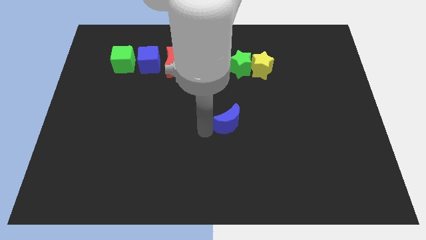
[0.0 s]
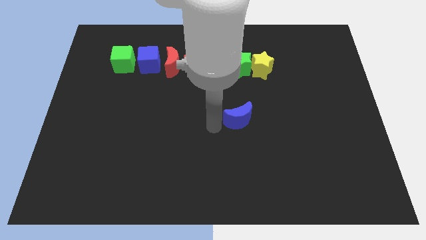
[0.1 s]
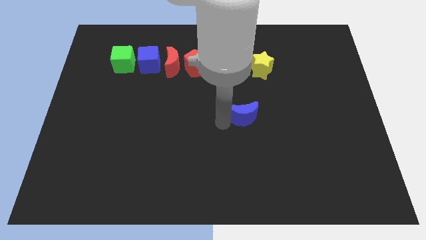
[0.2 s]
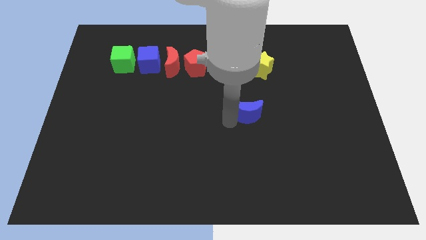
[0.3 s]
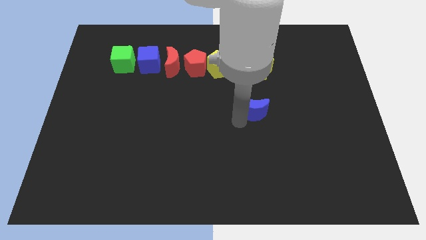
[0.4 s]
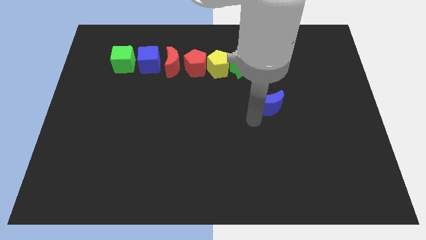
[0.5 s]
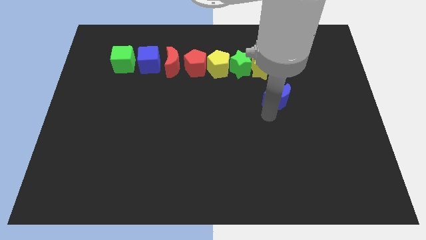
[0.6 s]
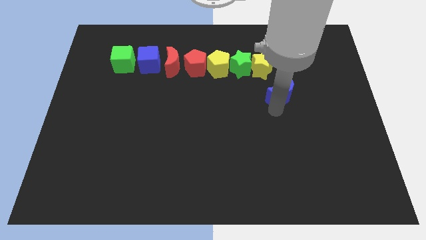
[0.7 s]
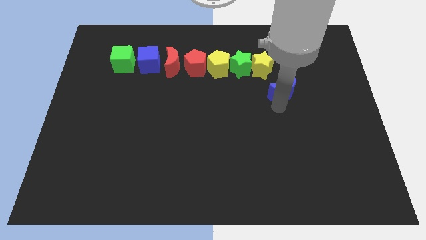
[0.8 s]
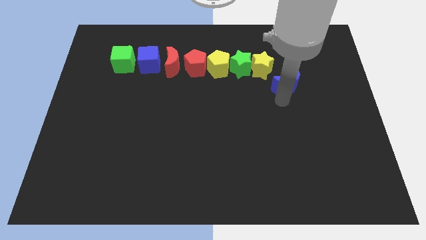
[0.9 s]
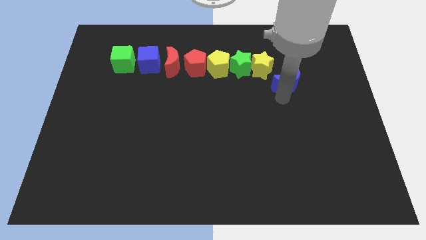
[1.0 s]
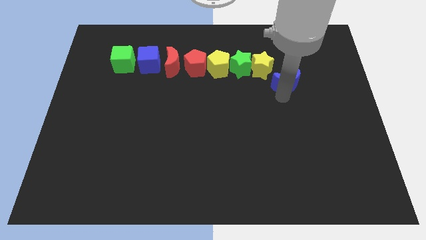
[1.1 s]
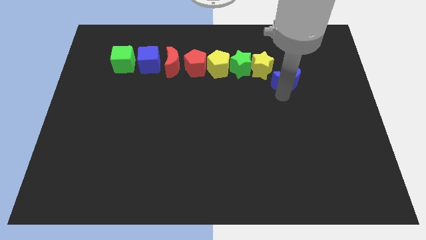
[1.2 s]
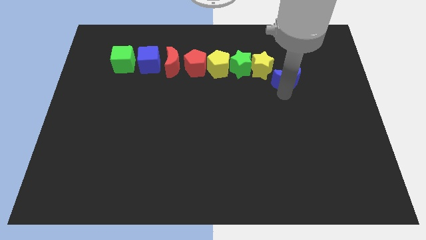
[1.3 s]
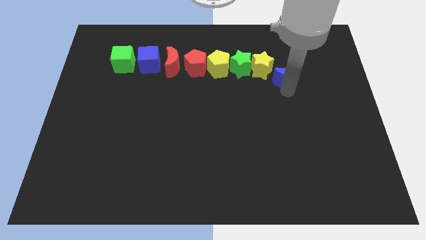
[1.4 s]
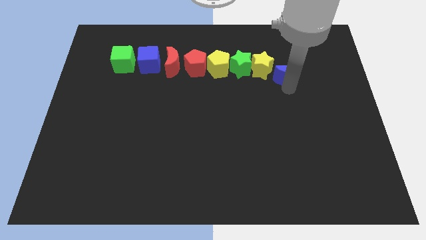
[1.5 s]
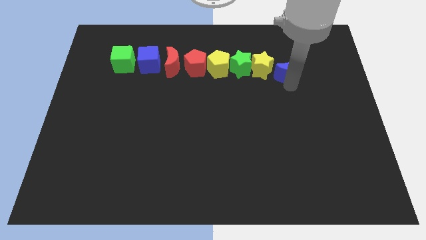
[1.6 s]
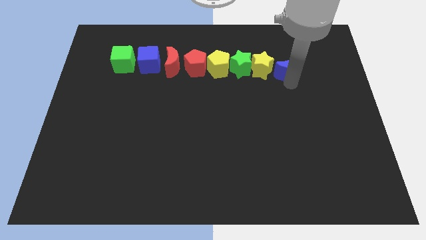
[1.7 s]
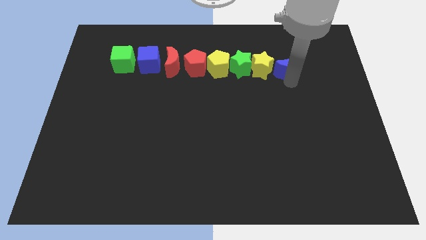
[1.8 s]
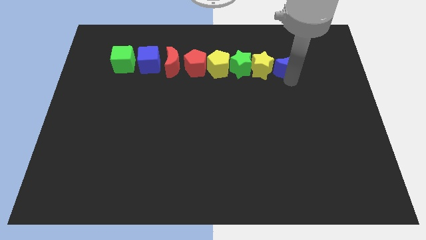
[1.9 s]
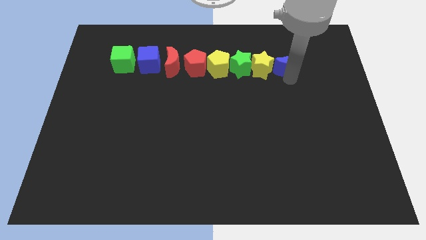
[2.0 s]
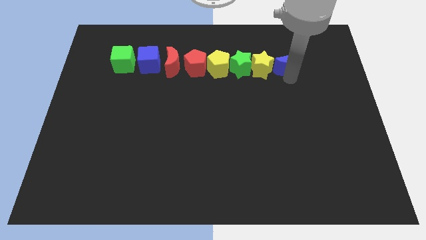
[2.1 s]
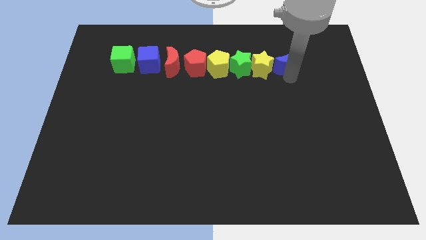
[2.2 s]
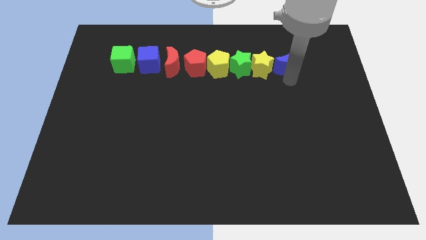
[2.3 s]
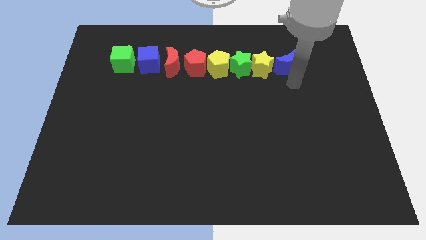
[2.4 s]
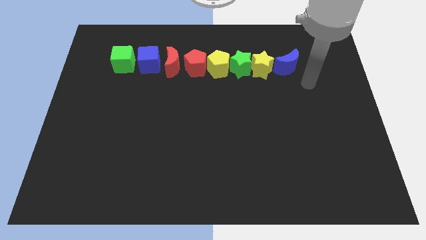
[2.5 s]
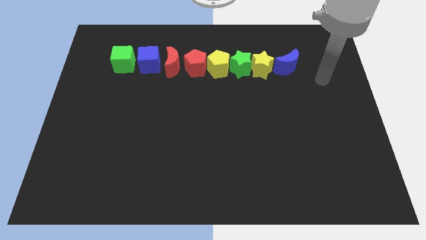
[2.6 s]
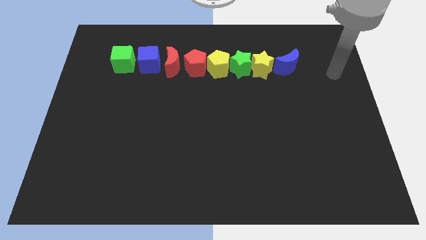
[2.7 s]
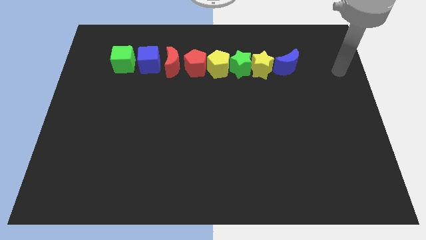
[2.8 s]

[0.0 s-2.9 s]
place blue crescent beside yellow star

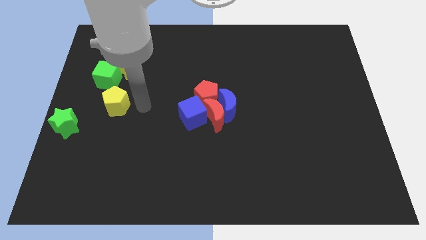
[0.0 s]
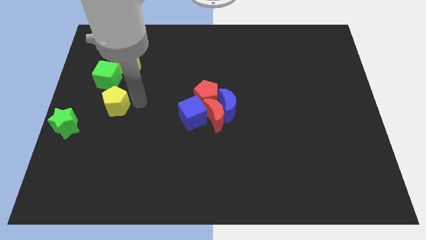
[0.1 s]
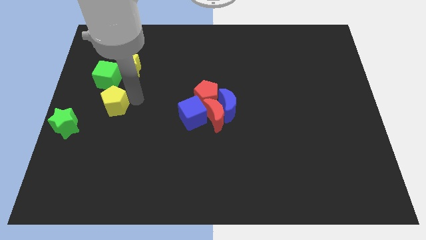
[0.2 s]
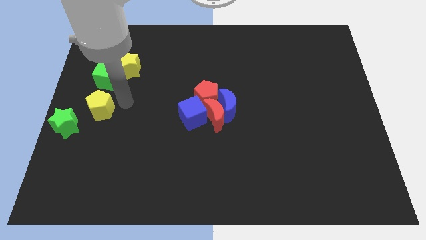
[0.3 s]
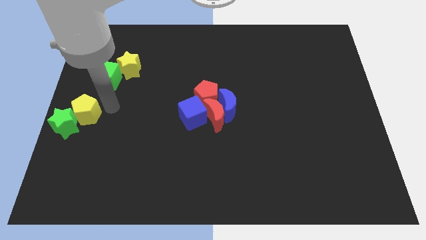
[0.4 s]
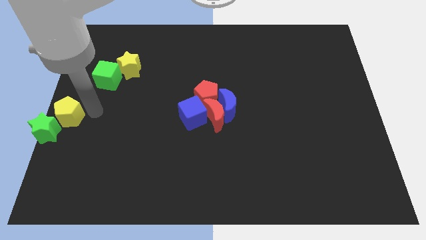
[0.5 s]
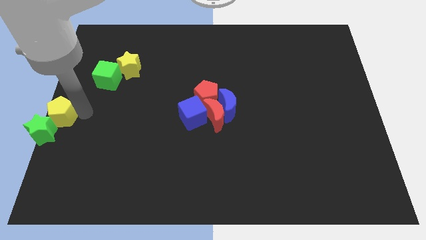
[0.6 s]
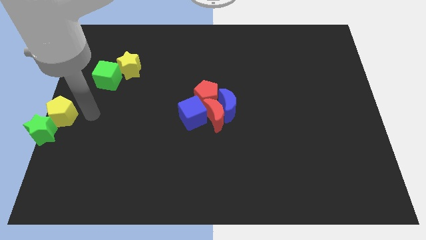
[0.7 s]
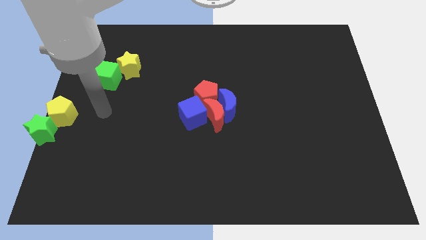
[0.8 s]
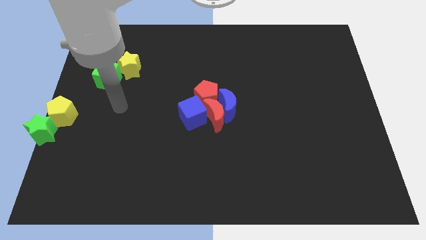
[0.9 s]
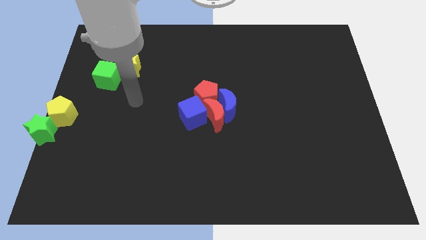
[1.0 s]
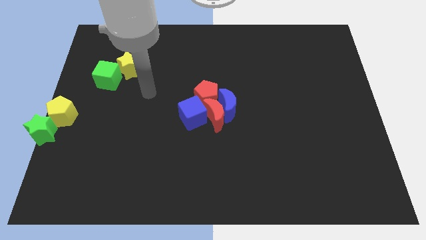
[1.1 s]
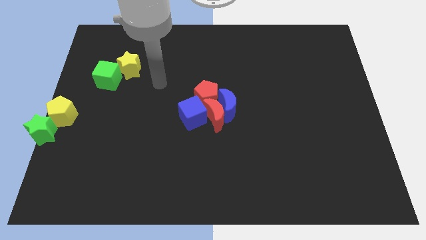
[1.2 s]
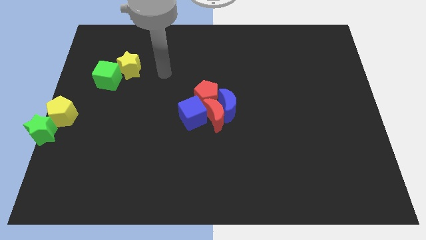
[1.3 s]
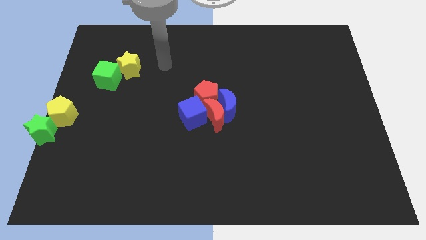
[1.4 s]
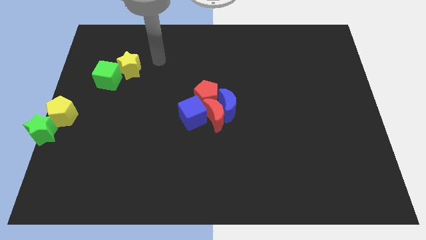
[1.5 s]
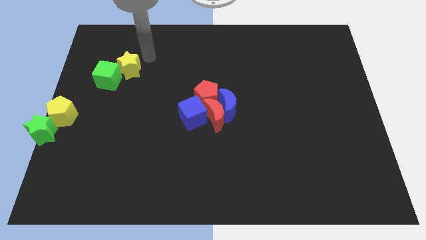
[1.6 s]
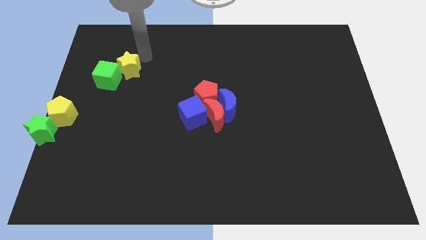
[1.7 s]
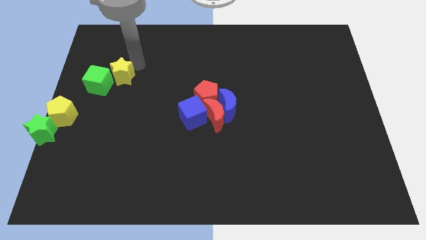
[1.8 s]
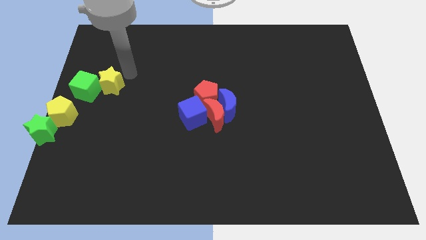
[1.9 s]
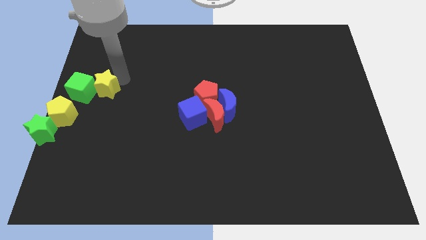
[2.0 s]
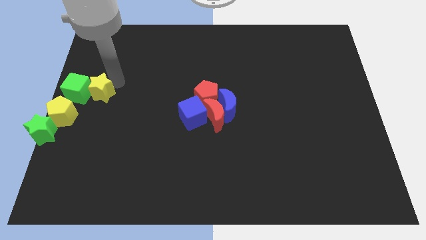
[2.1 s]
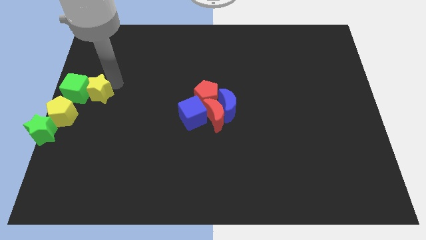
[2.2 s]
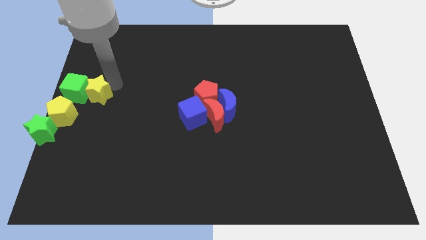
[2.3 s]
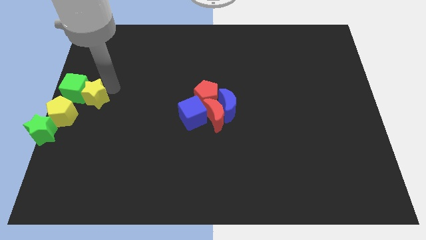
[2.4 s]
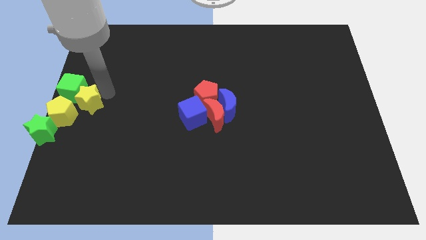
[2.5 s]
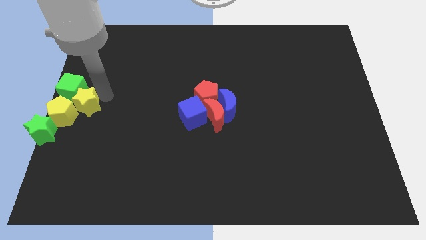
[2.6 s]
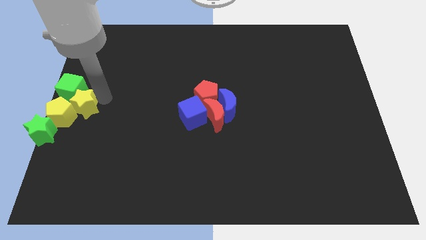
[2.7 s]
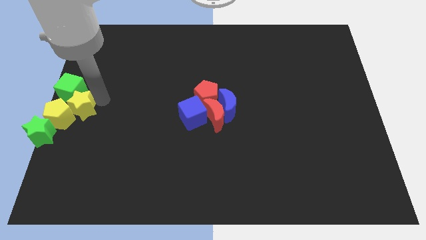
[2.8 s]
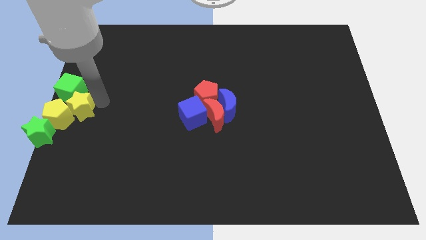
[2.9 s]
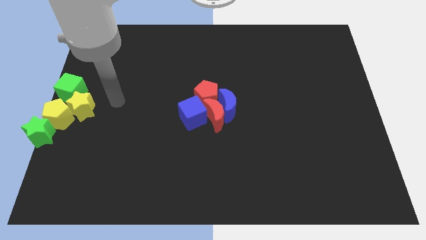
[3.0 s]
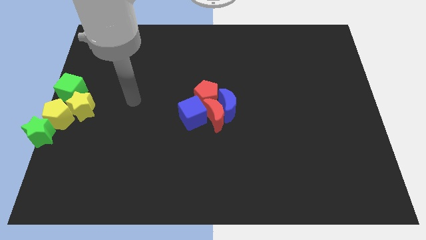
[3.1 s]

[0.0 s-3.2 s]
push the yellow star into the yellow pentagon

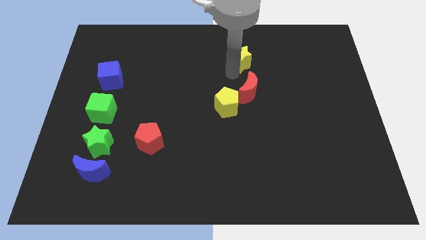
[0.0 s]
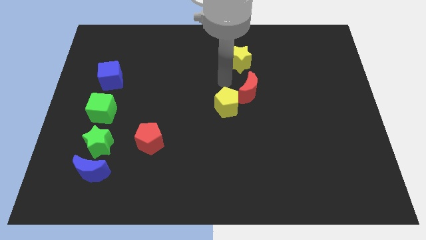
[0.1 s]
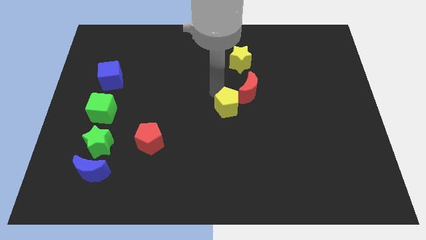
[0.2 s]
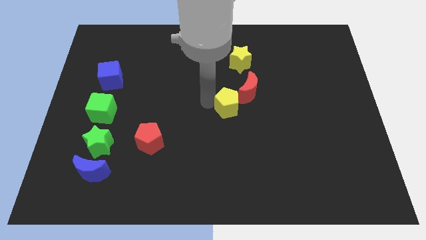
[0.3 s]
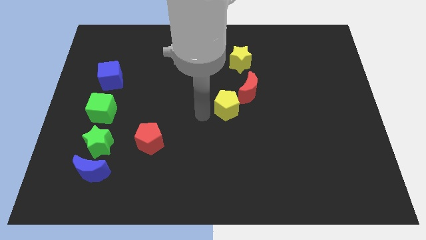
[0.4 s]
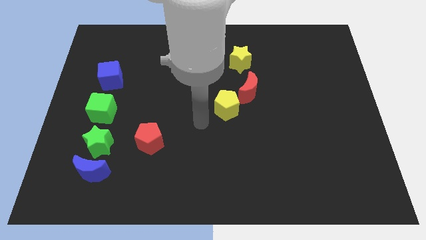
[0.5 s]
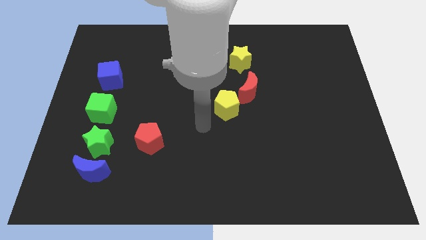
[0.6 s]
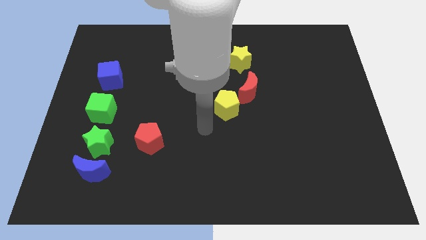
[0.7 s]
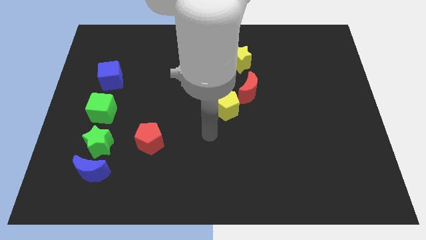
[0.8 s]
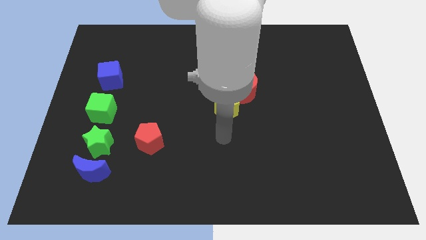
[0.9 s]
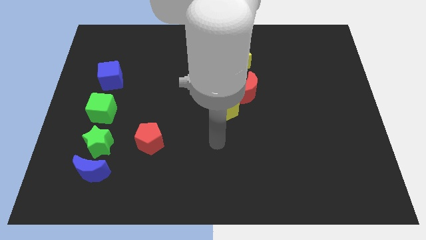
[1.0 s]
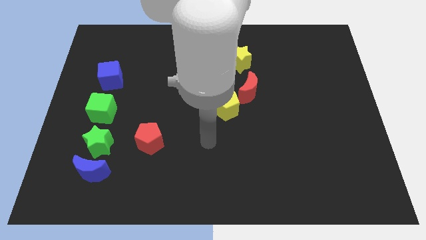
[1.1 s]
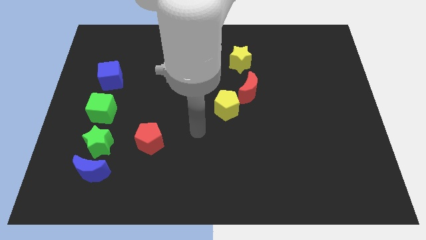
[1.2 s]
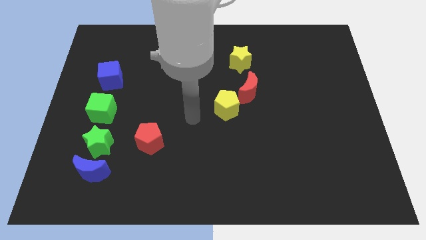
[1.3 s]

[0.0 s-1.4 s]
place your arm left to yellow pentagon

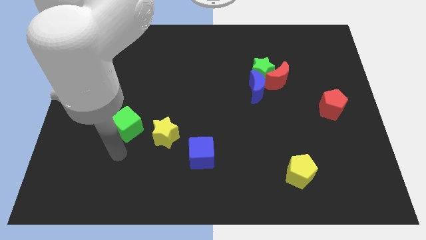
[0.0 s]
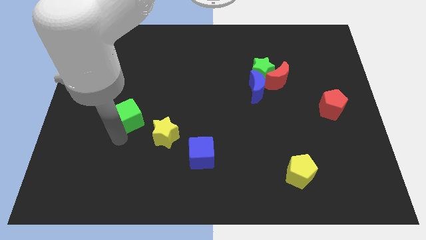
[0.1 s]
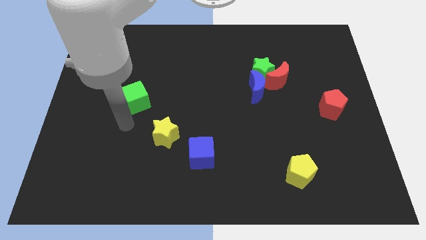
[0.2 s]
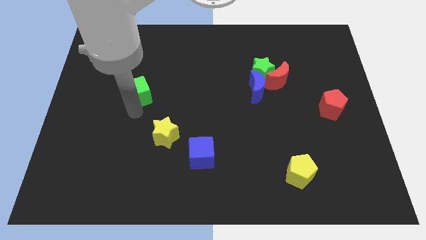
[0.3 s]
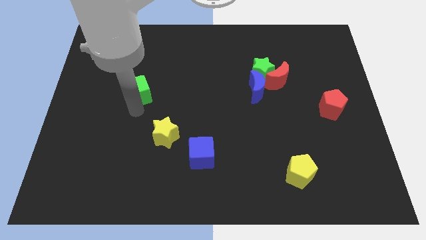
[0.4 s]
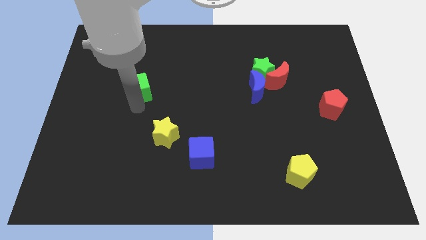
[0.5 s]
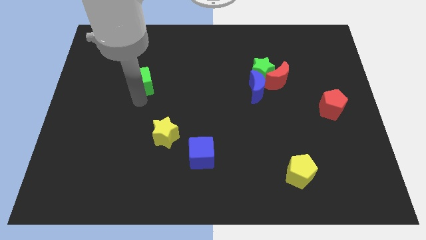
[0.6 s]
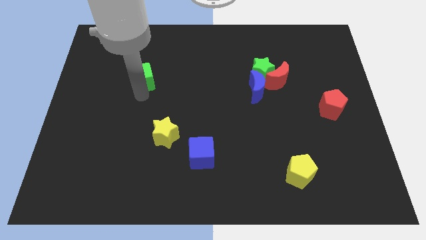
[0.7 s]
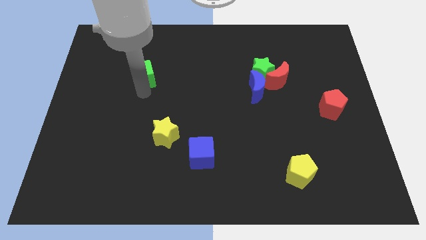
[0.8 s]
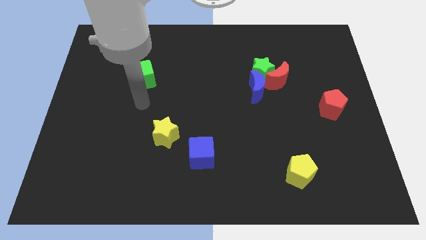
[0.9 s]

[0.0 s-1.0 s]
push the green cube upwards of the board

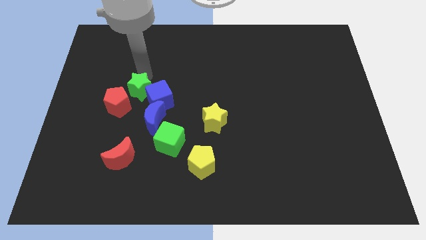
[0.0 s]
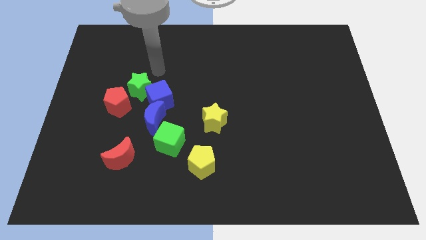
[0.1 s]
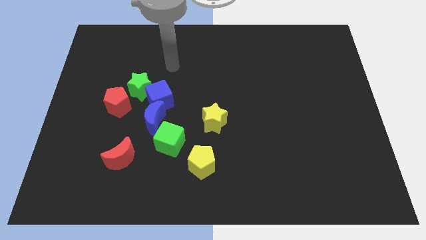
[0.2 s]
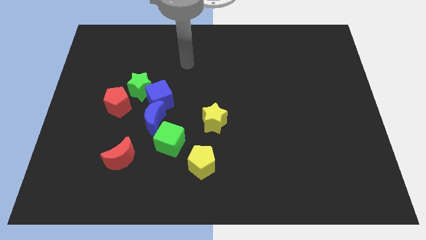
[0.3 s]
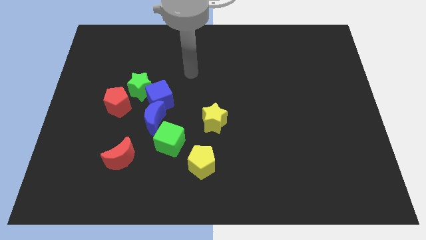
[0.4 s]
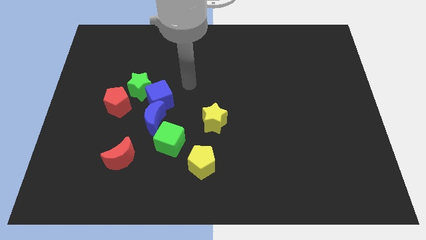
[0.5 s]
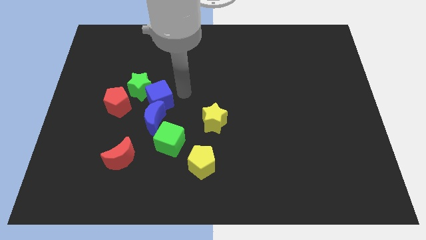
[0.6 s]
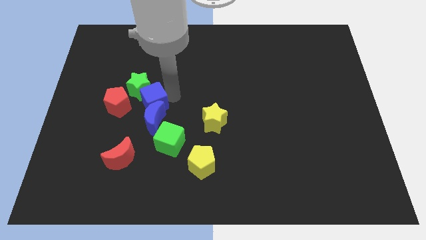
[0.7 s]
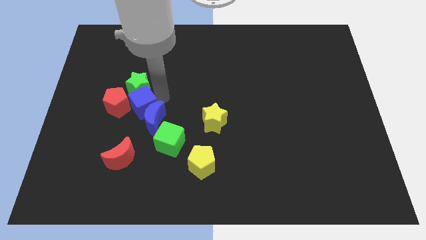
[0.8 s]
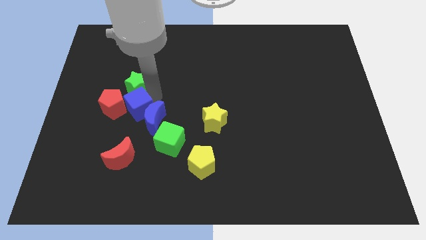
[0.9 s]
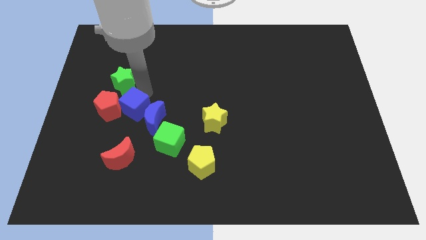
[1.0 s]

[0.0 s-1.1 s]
push blue cube into red pentagon
